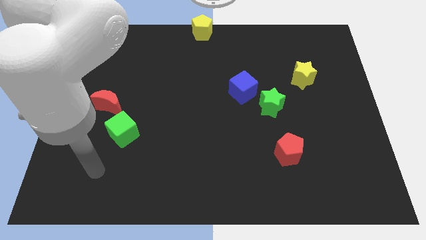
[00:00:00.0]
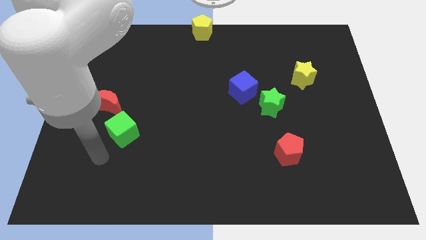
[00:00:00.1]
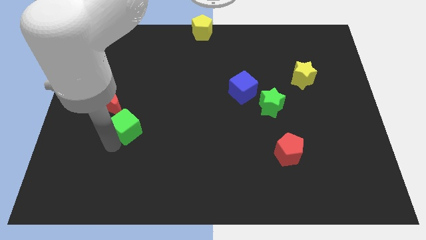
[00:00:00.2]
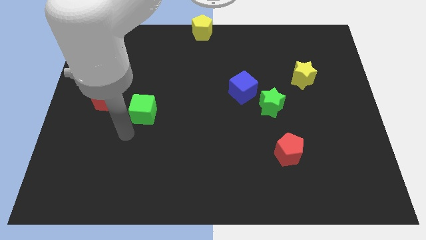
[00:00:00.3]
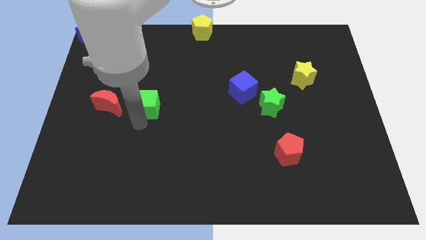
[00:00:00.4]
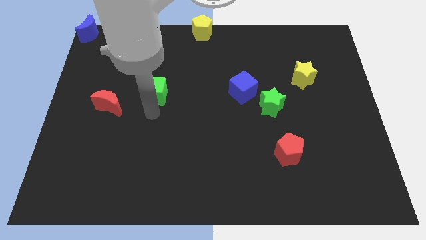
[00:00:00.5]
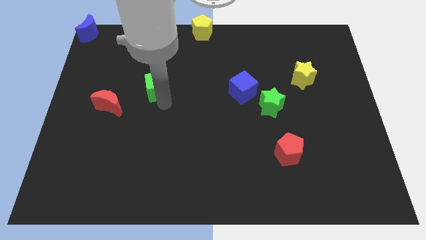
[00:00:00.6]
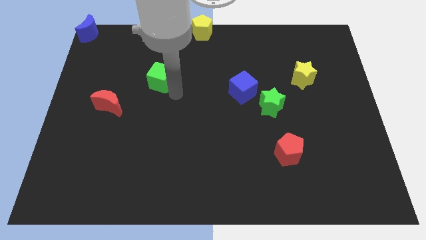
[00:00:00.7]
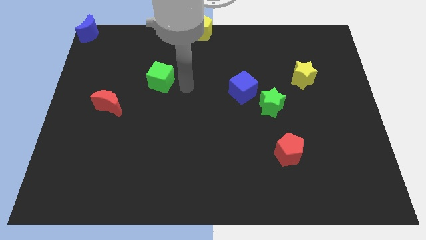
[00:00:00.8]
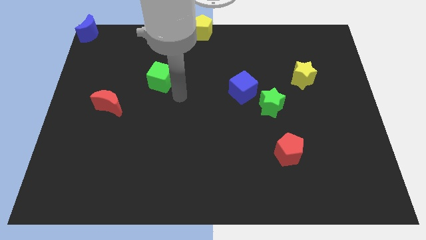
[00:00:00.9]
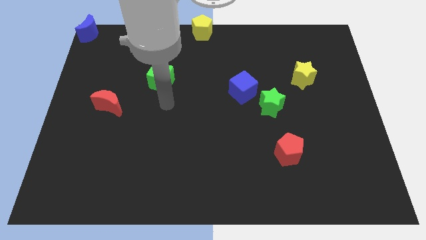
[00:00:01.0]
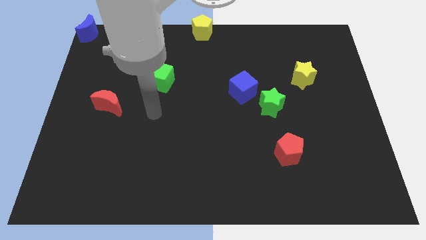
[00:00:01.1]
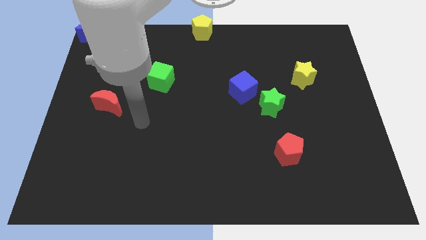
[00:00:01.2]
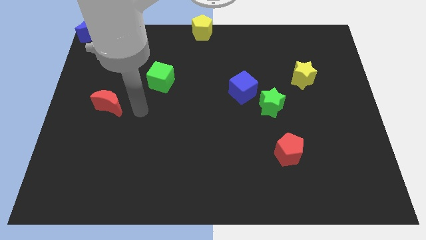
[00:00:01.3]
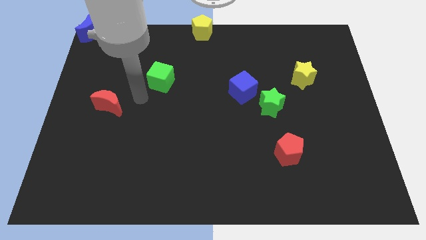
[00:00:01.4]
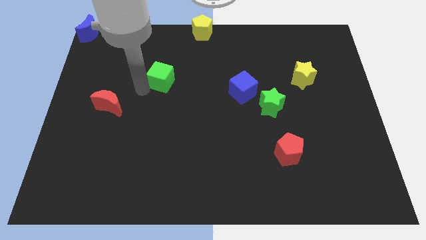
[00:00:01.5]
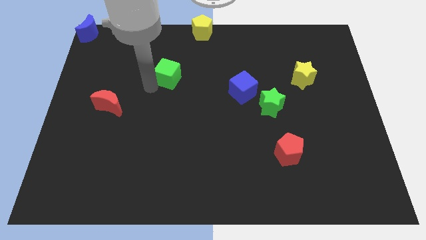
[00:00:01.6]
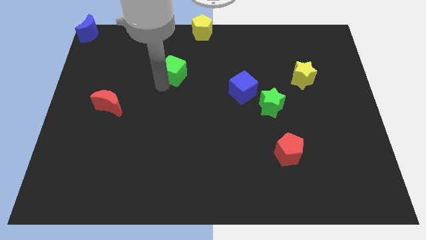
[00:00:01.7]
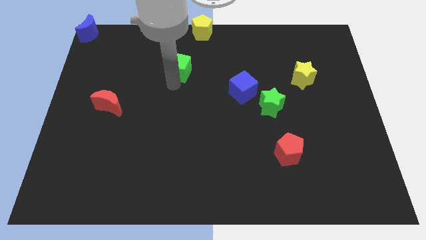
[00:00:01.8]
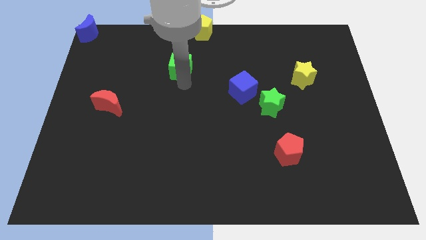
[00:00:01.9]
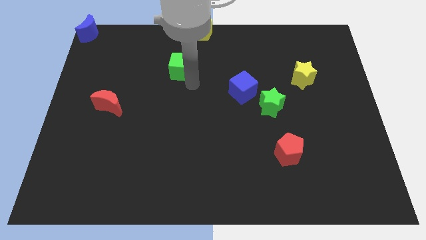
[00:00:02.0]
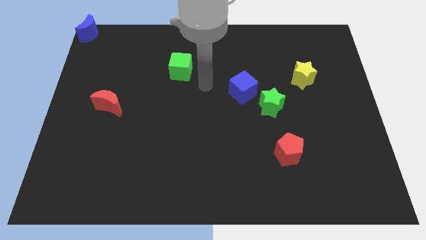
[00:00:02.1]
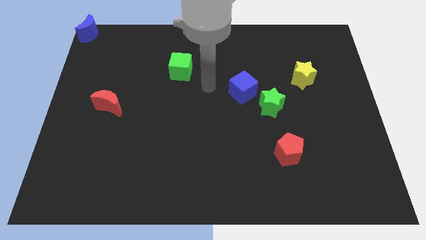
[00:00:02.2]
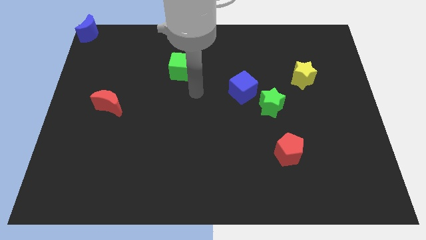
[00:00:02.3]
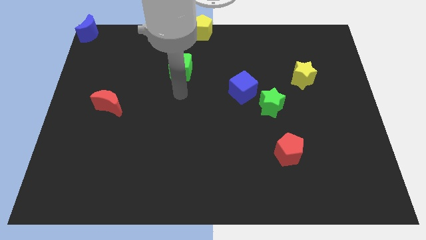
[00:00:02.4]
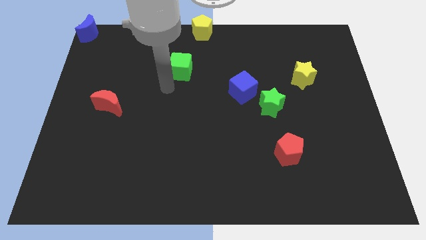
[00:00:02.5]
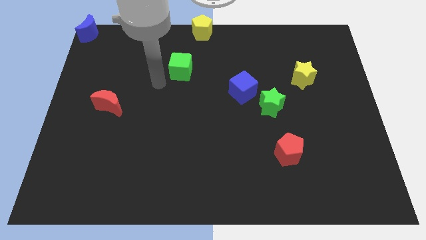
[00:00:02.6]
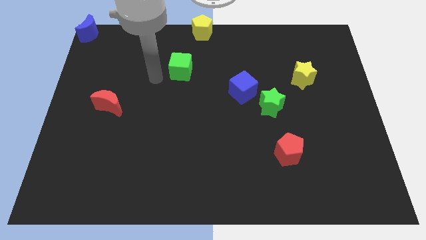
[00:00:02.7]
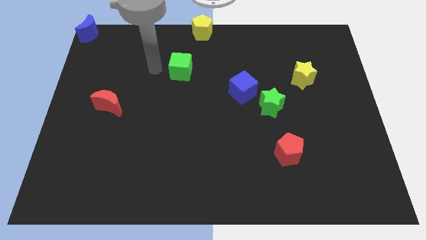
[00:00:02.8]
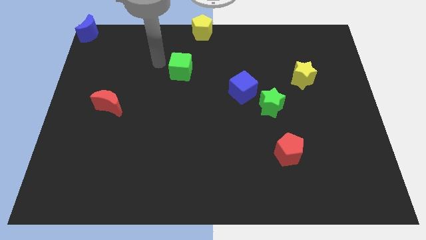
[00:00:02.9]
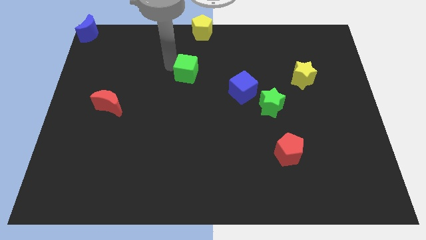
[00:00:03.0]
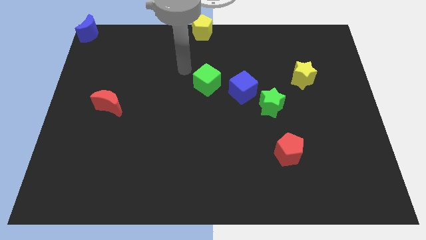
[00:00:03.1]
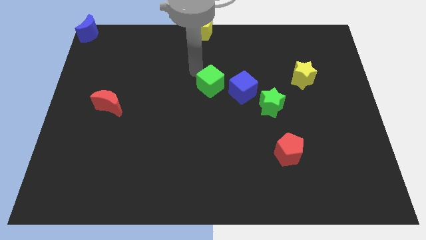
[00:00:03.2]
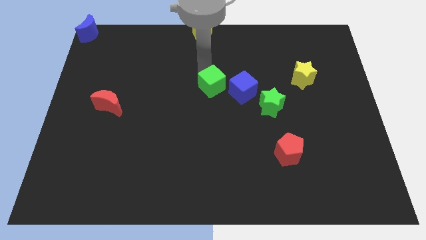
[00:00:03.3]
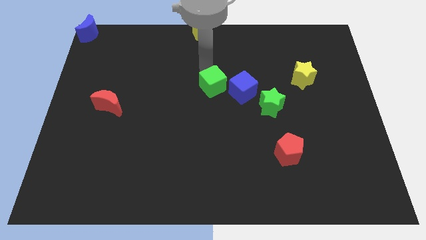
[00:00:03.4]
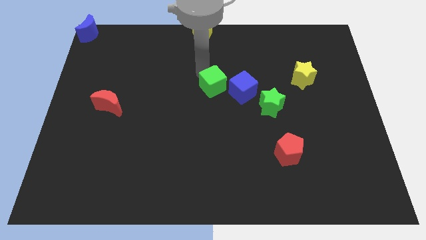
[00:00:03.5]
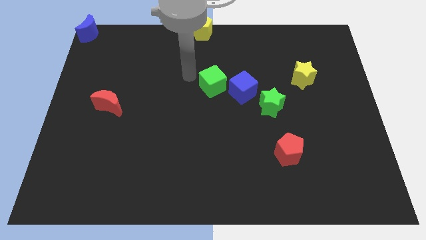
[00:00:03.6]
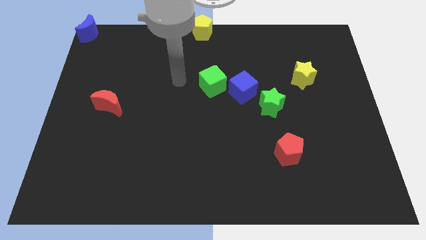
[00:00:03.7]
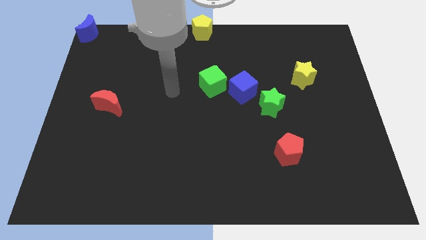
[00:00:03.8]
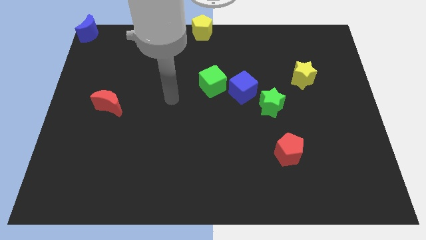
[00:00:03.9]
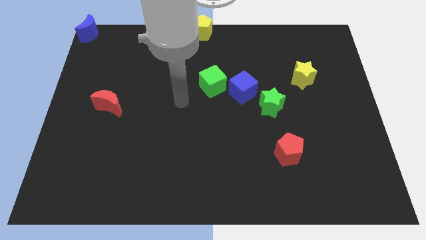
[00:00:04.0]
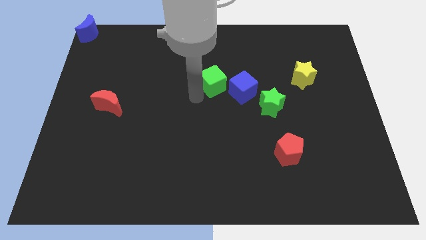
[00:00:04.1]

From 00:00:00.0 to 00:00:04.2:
move green cube to the left of blue cube

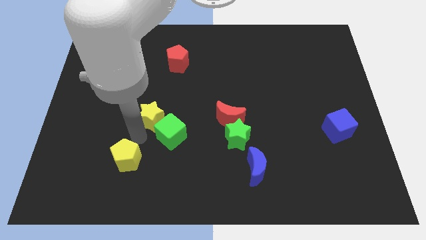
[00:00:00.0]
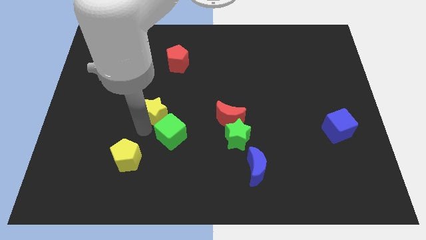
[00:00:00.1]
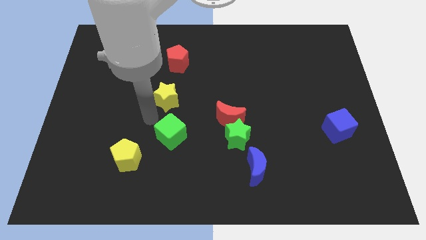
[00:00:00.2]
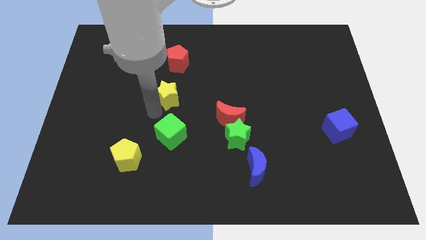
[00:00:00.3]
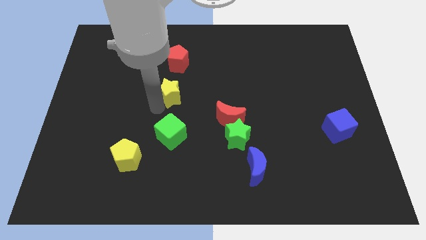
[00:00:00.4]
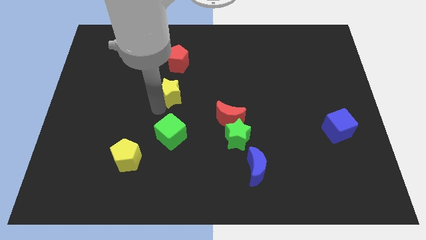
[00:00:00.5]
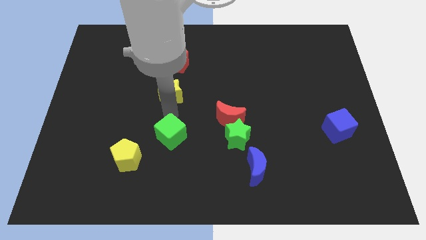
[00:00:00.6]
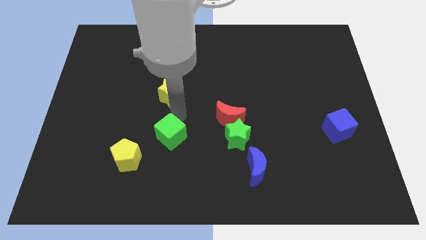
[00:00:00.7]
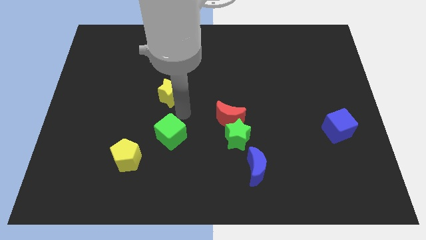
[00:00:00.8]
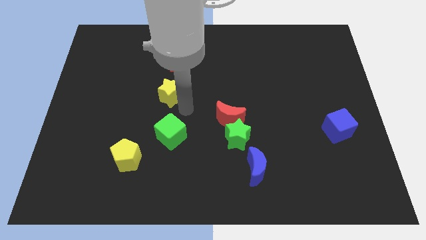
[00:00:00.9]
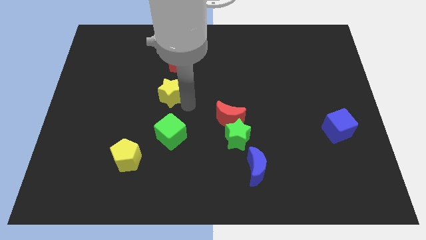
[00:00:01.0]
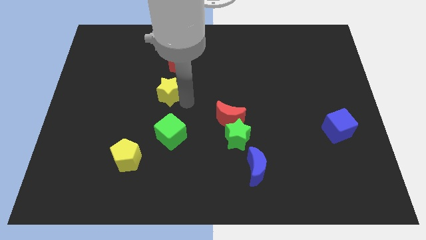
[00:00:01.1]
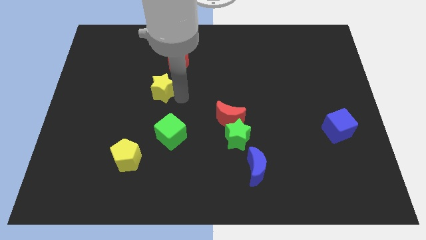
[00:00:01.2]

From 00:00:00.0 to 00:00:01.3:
push the yellow star slightly to the top

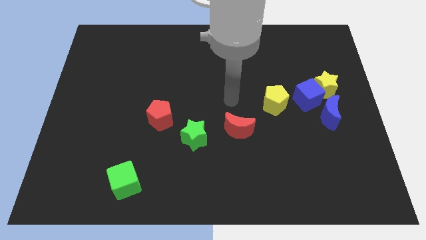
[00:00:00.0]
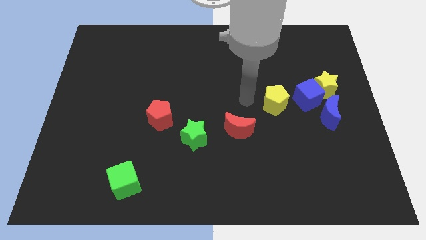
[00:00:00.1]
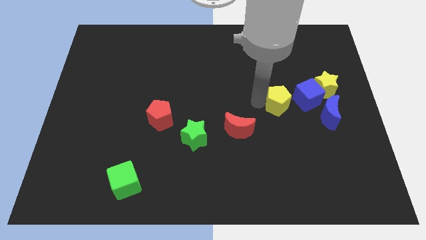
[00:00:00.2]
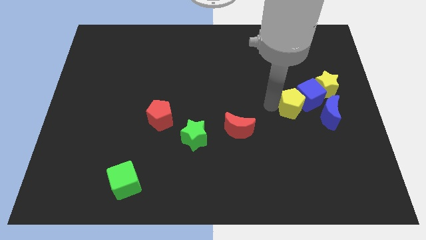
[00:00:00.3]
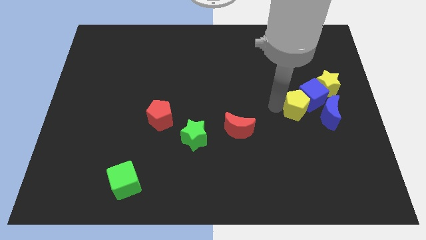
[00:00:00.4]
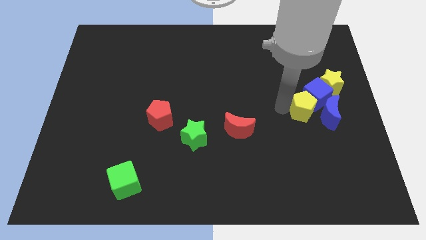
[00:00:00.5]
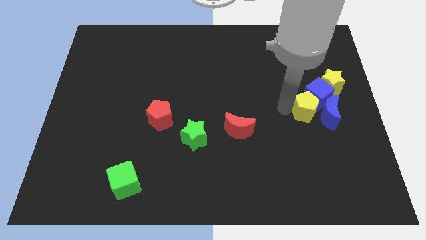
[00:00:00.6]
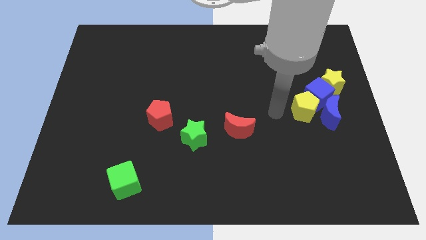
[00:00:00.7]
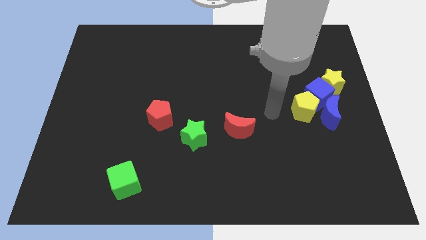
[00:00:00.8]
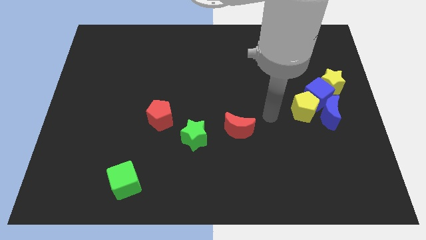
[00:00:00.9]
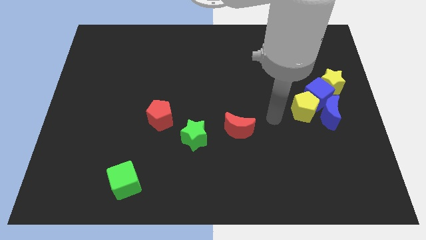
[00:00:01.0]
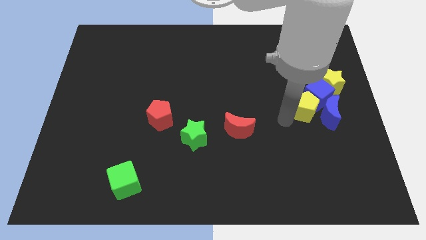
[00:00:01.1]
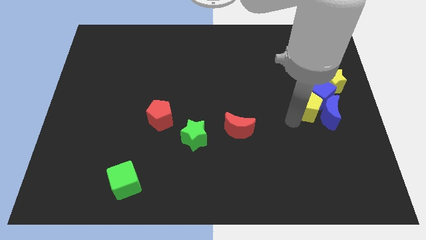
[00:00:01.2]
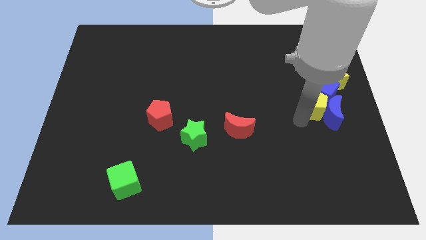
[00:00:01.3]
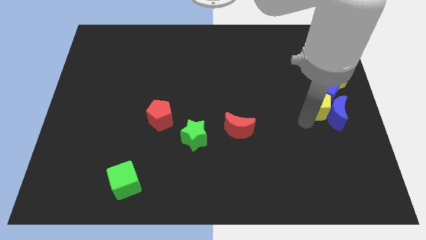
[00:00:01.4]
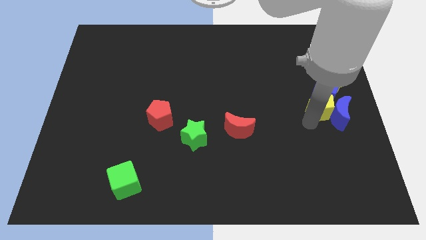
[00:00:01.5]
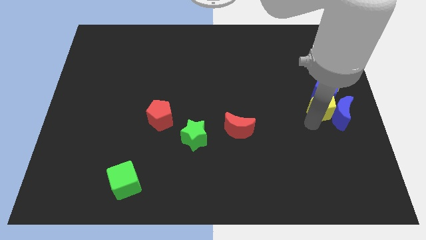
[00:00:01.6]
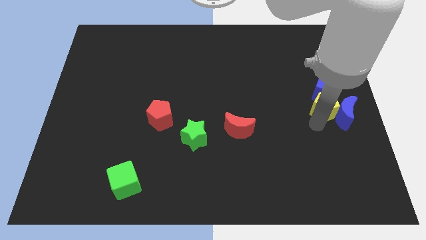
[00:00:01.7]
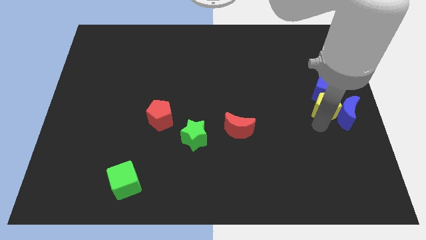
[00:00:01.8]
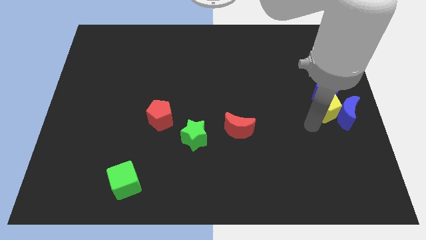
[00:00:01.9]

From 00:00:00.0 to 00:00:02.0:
move the yellow pentagon towards blue blocks

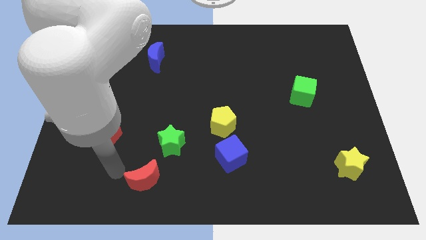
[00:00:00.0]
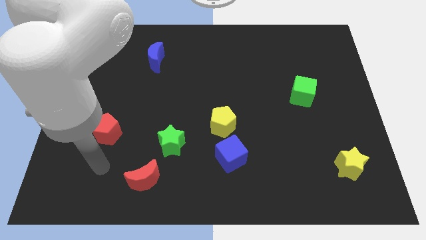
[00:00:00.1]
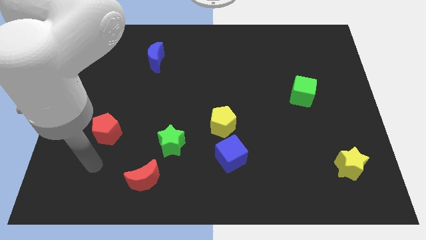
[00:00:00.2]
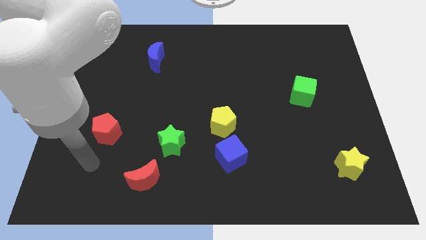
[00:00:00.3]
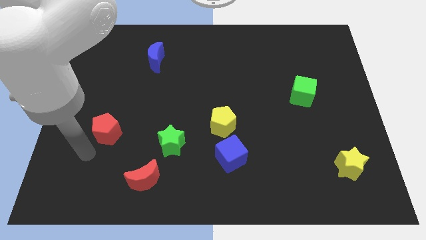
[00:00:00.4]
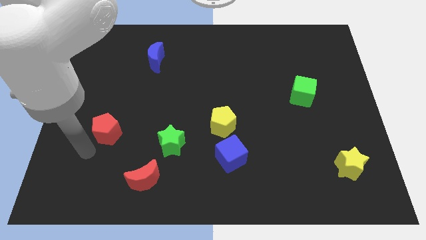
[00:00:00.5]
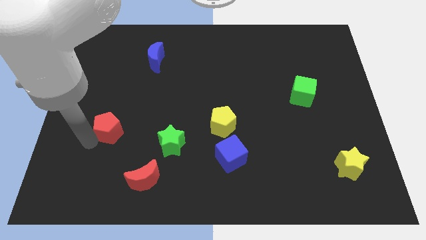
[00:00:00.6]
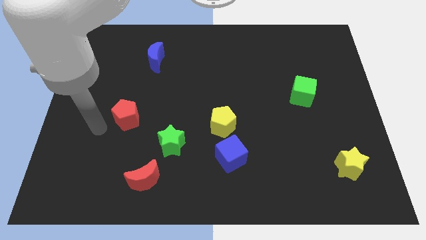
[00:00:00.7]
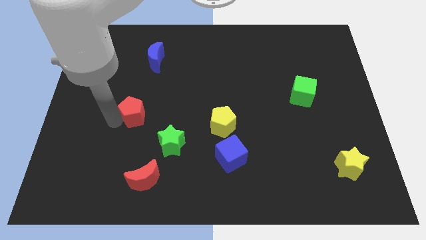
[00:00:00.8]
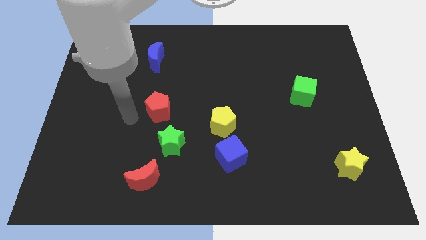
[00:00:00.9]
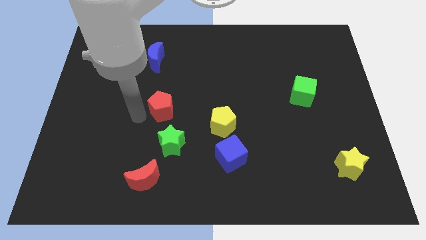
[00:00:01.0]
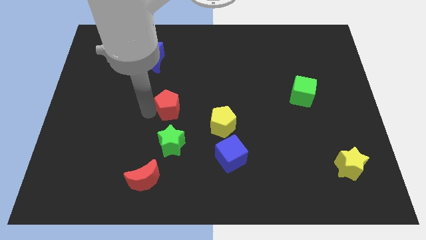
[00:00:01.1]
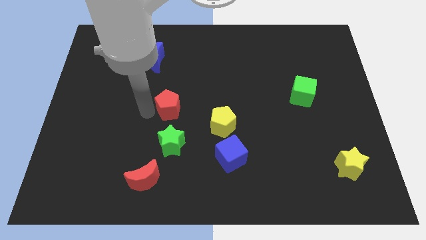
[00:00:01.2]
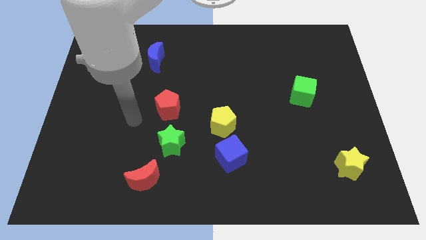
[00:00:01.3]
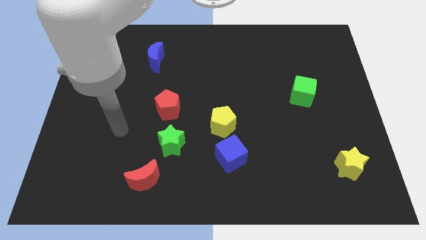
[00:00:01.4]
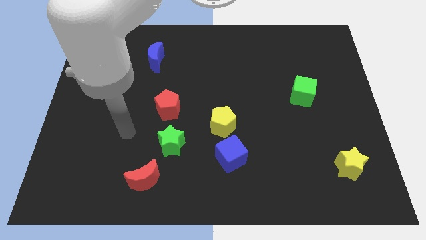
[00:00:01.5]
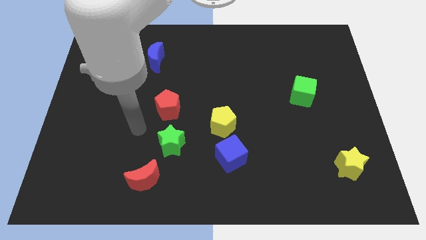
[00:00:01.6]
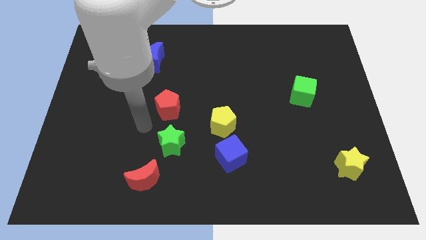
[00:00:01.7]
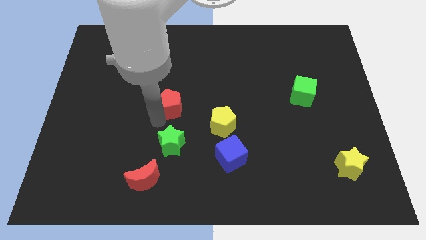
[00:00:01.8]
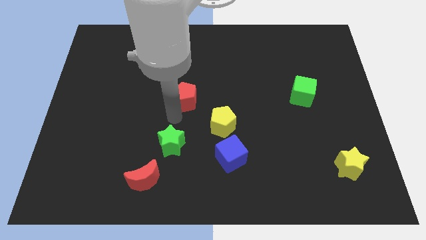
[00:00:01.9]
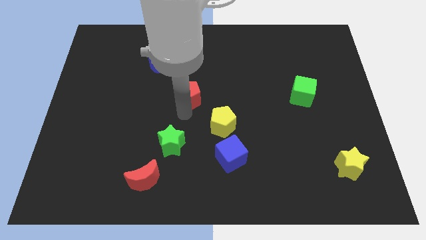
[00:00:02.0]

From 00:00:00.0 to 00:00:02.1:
place red pentagon diagonal on the top left side of the yellow pentagon
